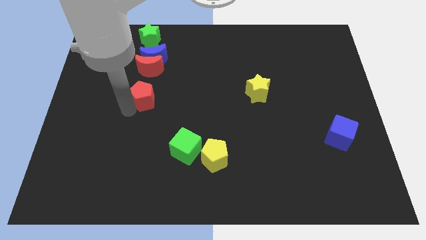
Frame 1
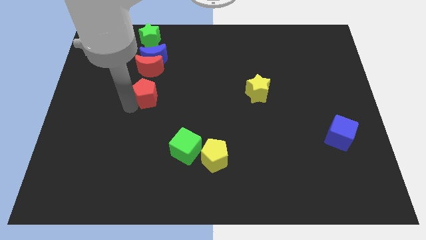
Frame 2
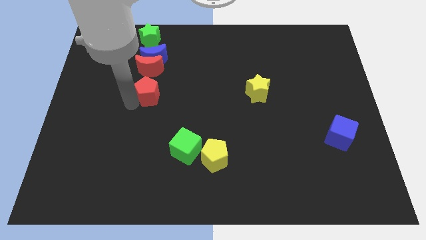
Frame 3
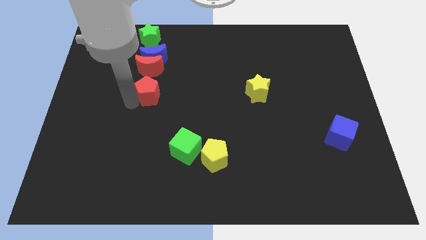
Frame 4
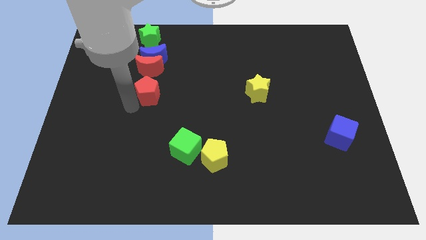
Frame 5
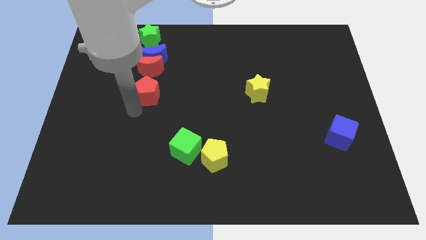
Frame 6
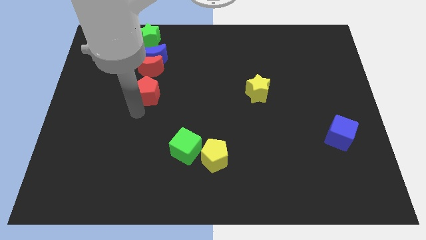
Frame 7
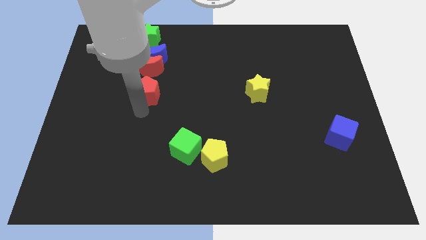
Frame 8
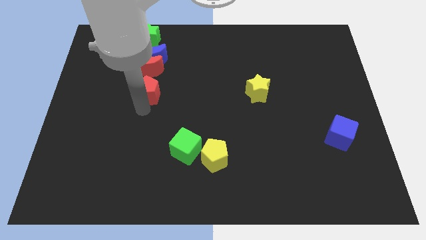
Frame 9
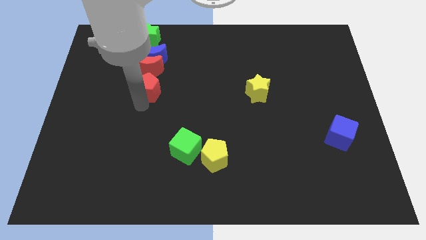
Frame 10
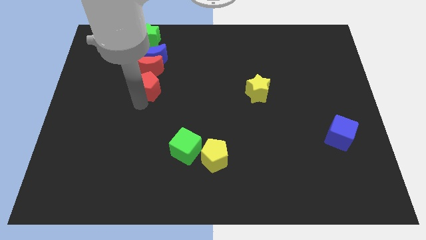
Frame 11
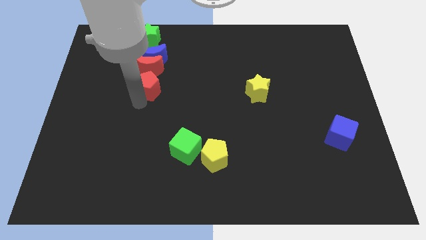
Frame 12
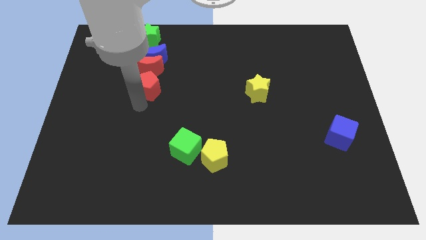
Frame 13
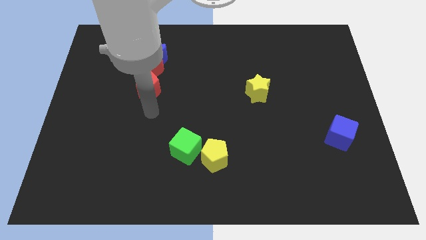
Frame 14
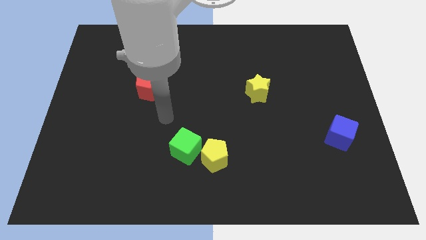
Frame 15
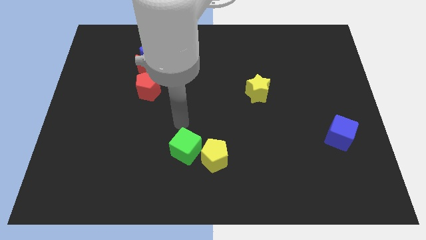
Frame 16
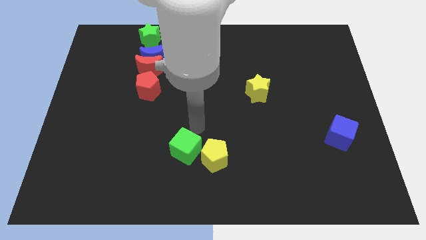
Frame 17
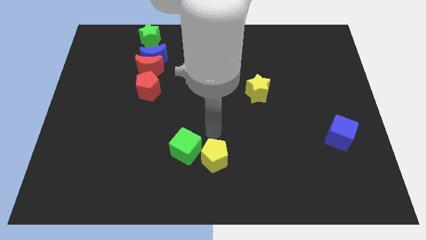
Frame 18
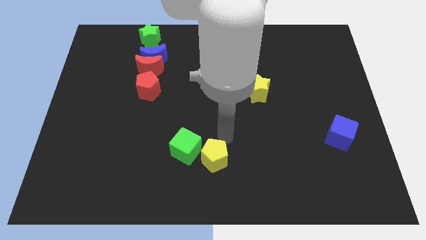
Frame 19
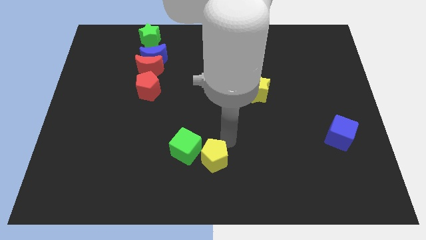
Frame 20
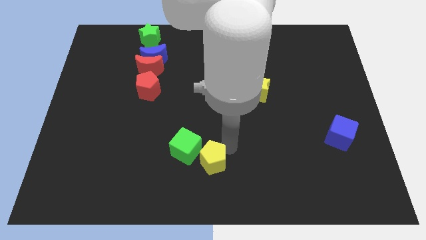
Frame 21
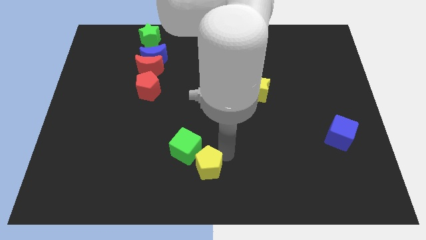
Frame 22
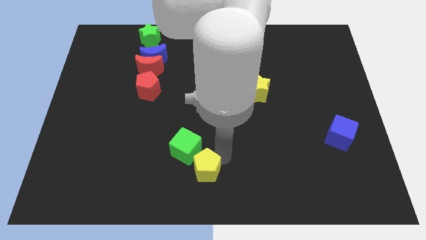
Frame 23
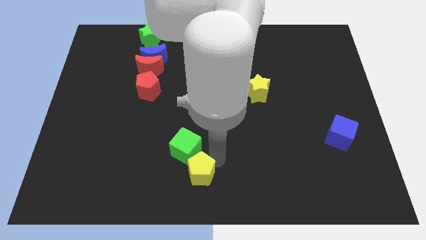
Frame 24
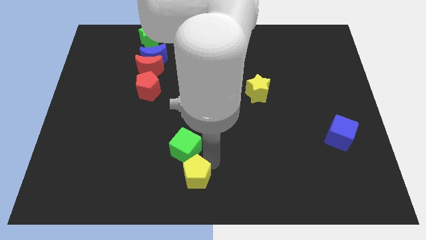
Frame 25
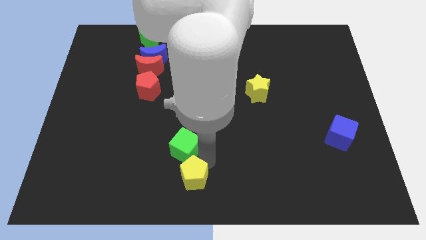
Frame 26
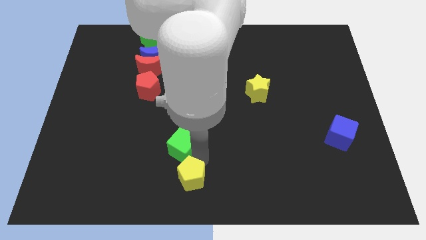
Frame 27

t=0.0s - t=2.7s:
slightly adjust the yellow pentagon to the bottom of the green cube

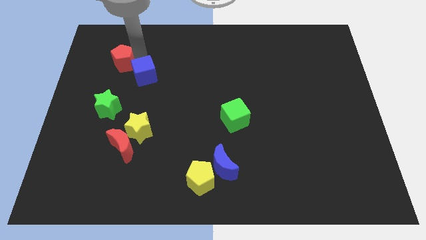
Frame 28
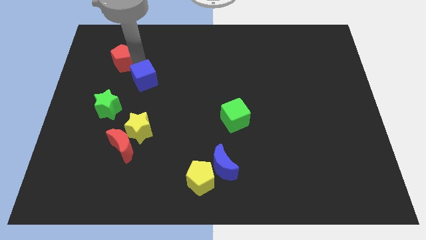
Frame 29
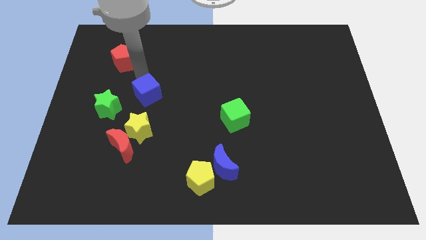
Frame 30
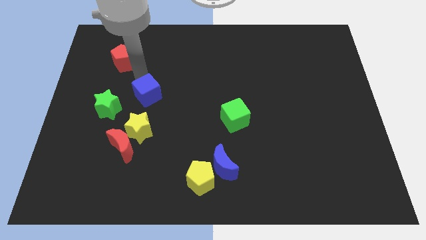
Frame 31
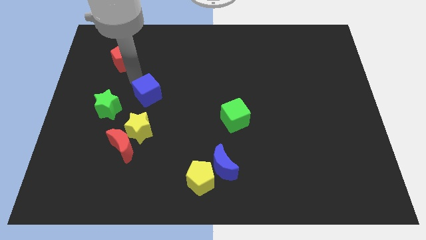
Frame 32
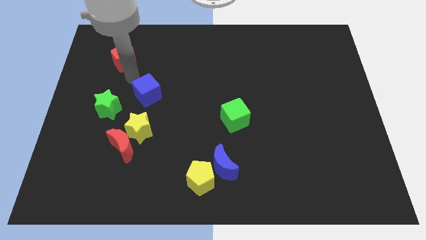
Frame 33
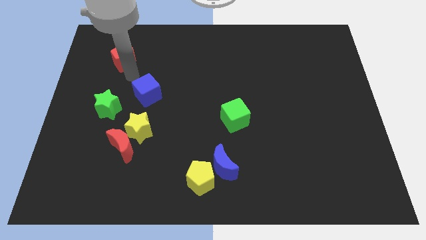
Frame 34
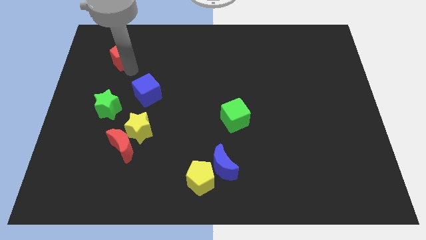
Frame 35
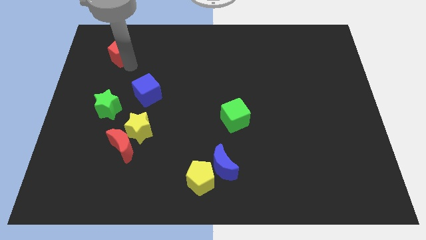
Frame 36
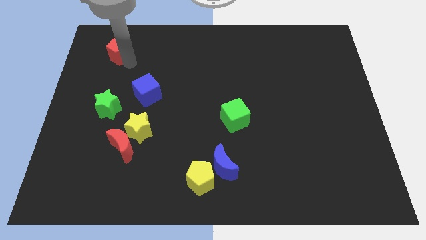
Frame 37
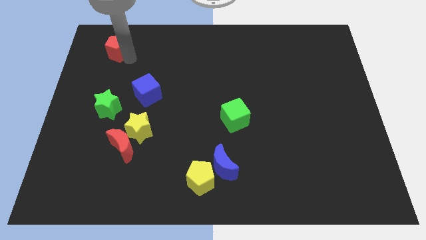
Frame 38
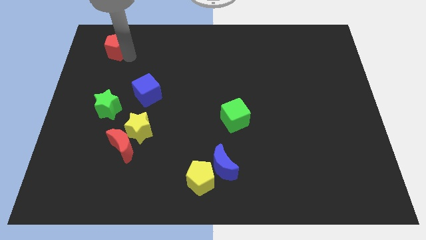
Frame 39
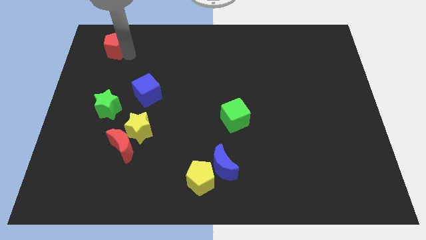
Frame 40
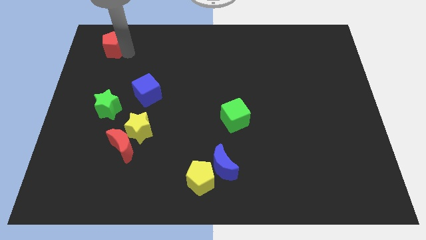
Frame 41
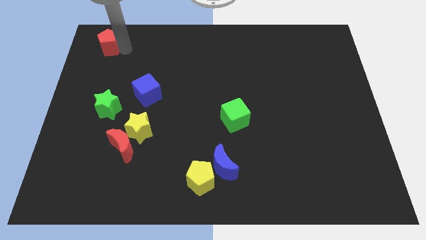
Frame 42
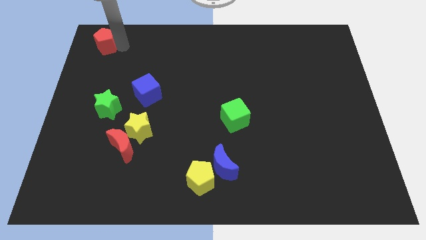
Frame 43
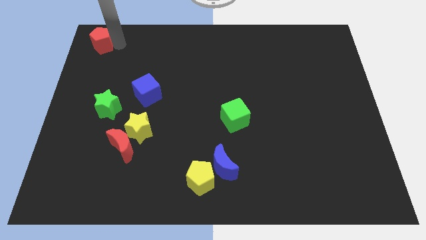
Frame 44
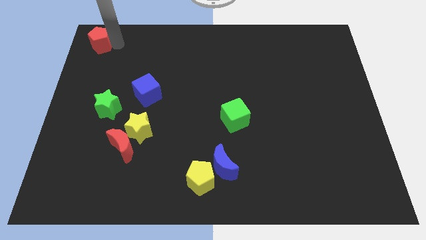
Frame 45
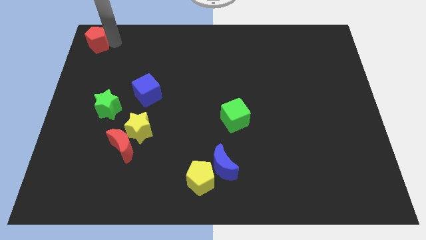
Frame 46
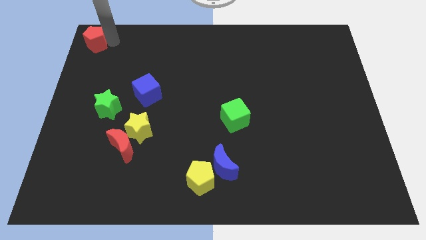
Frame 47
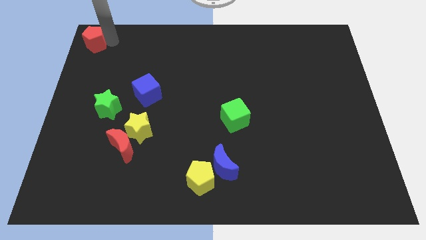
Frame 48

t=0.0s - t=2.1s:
push red pentagon to the top right

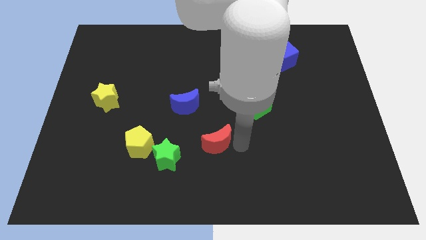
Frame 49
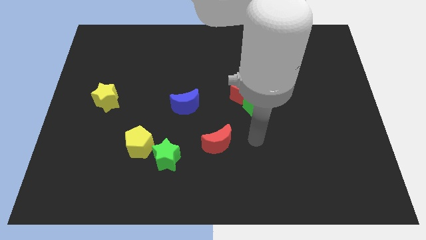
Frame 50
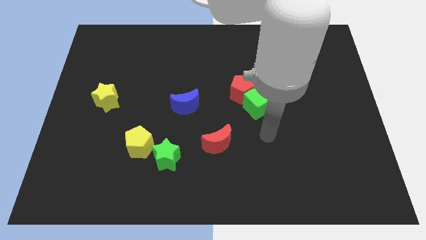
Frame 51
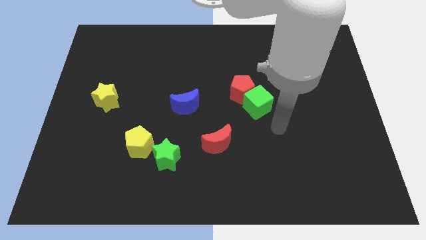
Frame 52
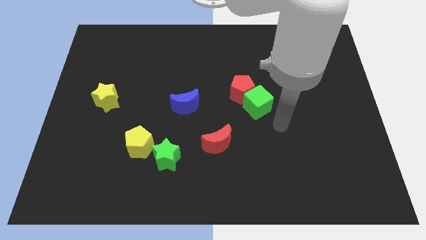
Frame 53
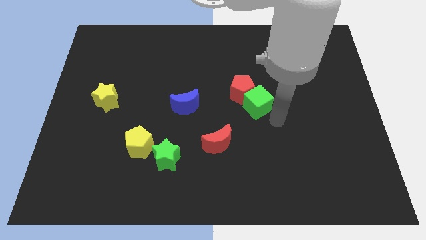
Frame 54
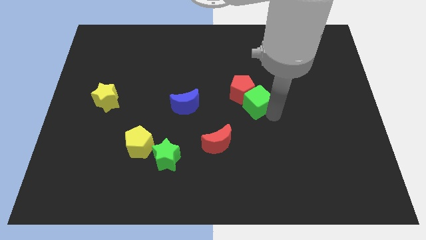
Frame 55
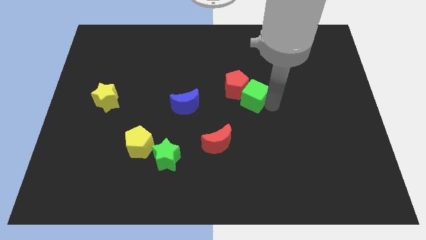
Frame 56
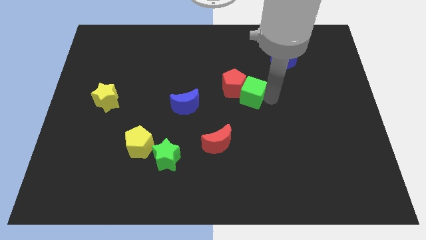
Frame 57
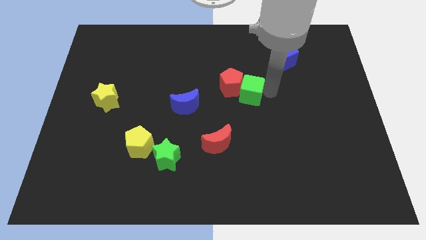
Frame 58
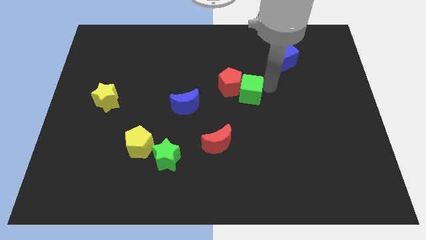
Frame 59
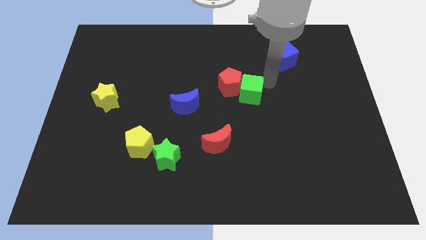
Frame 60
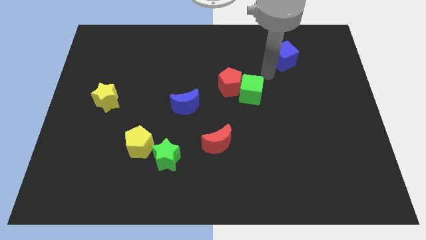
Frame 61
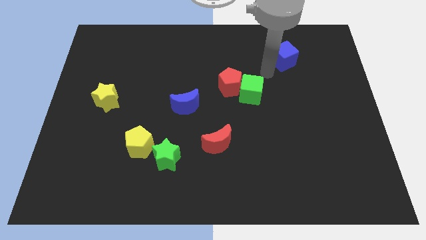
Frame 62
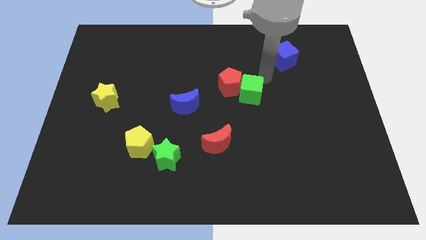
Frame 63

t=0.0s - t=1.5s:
slide the green cube parallel right to the red pentagon

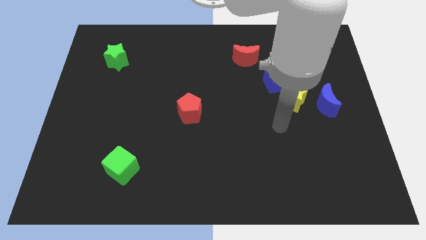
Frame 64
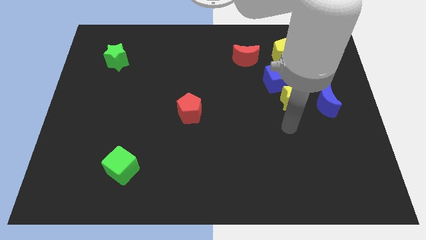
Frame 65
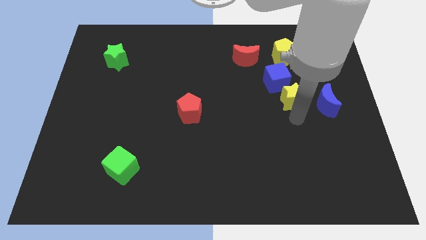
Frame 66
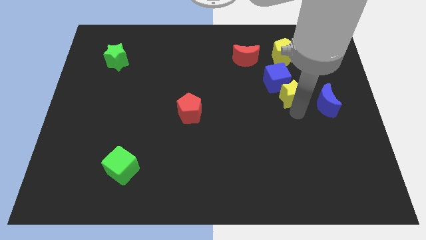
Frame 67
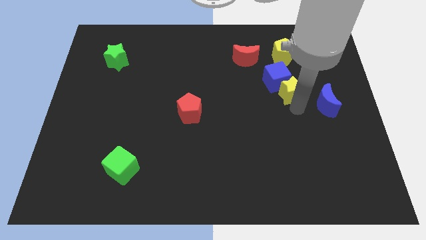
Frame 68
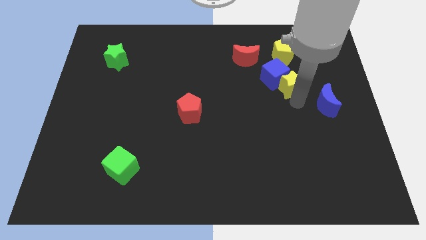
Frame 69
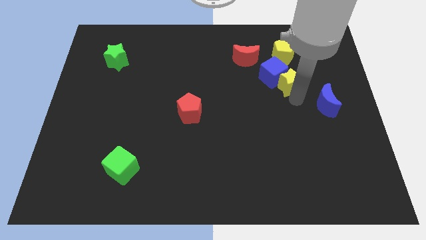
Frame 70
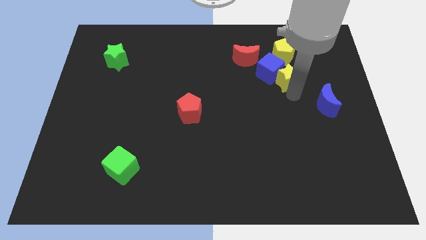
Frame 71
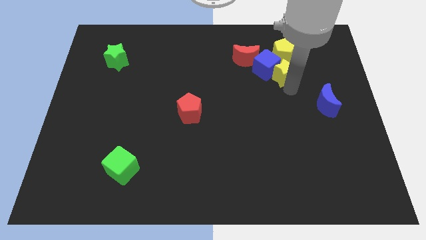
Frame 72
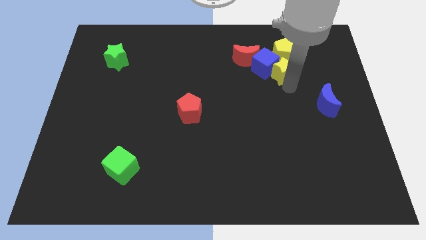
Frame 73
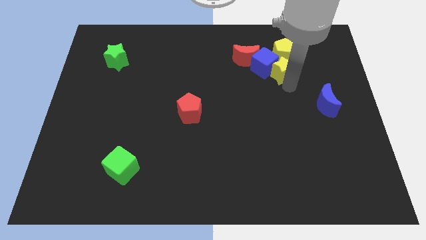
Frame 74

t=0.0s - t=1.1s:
push the yellow star into the blue cube

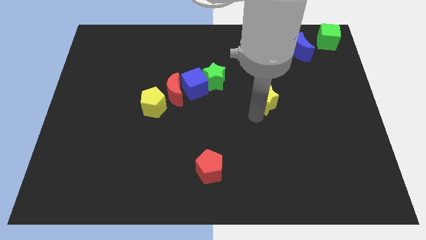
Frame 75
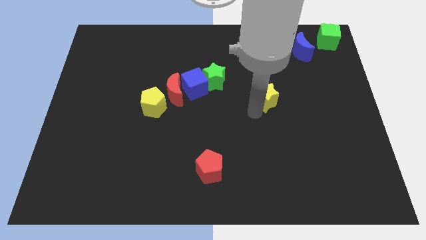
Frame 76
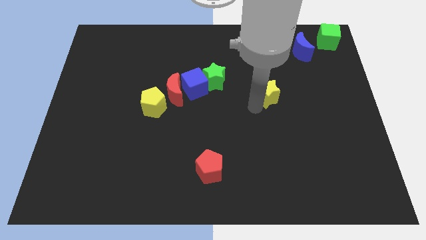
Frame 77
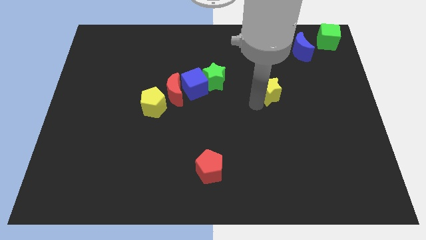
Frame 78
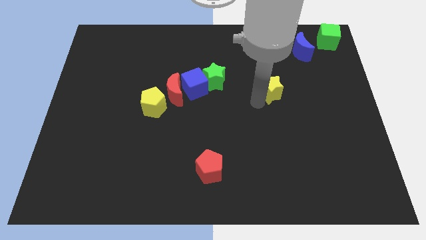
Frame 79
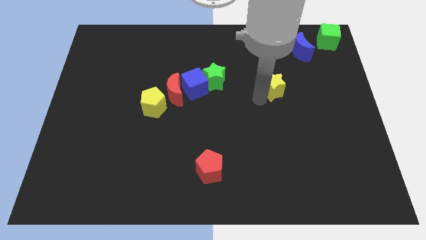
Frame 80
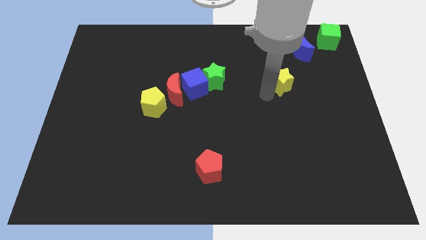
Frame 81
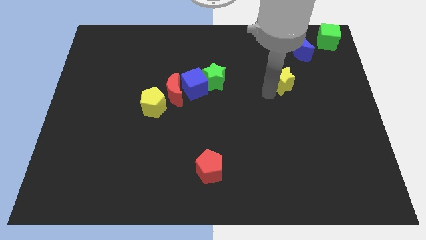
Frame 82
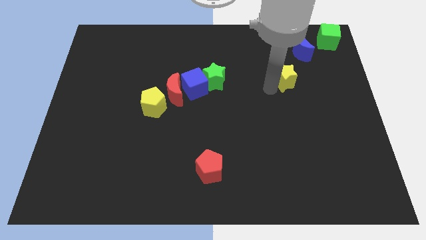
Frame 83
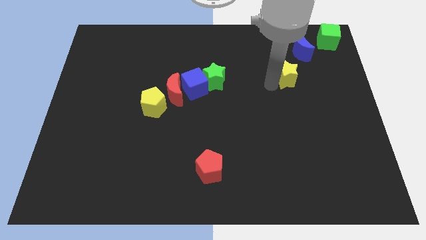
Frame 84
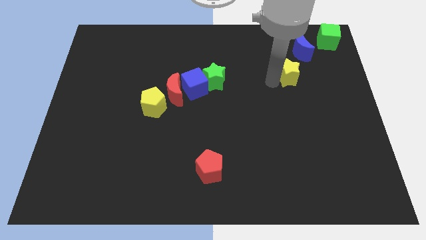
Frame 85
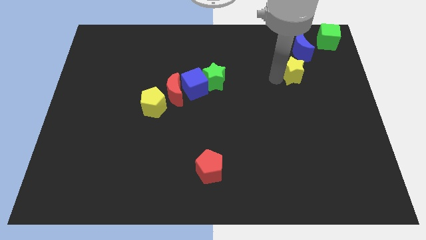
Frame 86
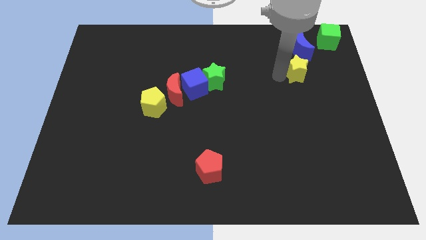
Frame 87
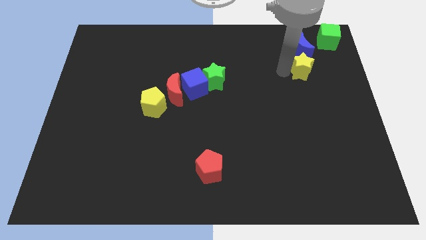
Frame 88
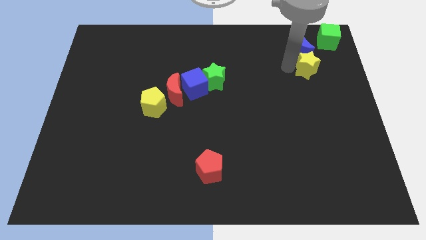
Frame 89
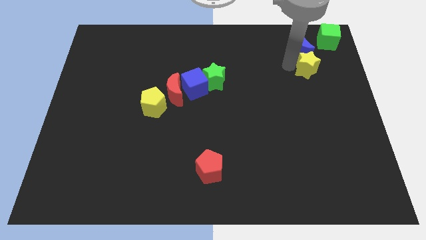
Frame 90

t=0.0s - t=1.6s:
move the yellow star close to the blue moon
